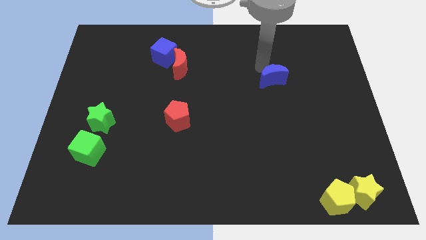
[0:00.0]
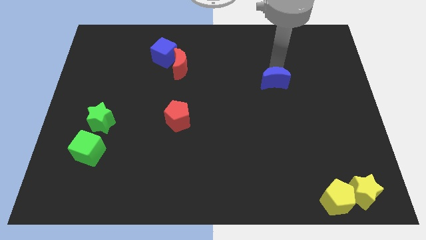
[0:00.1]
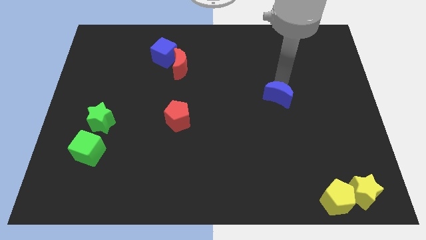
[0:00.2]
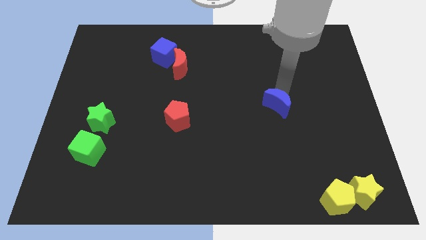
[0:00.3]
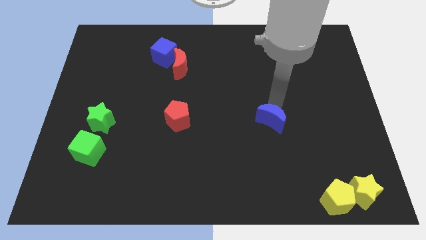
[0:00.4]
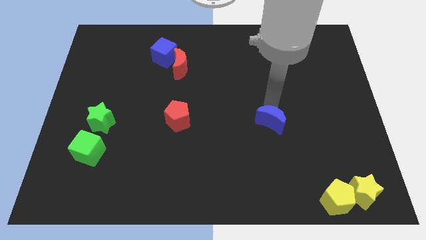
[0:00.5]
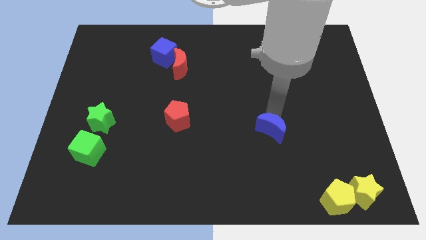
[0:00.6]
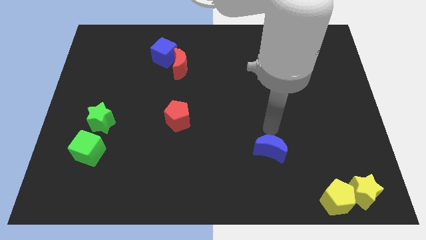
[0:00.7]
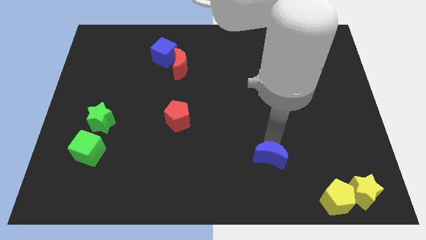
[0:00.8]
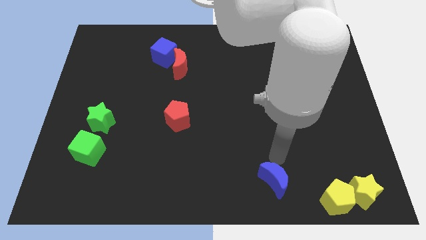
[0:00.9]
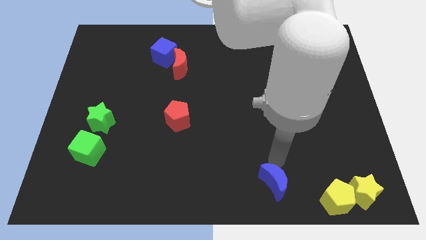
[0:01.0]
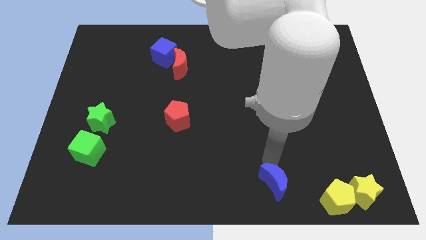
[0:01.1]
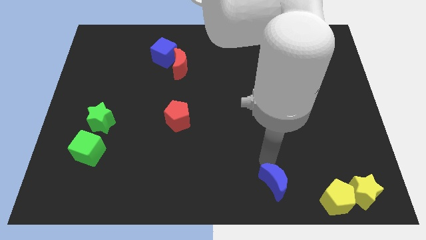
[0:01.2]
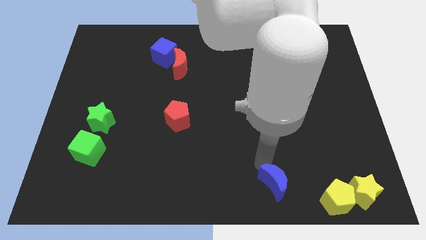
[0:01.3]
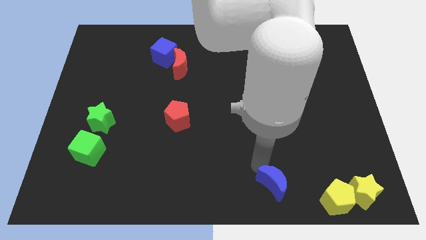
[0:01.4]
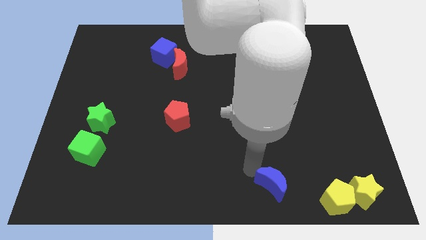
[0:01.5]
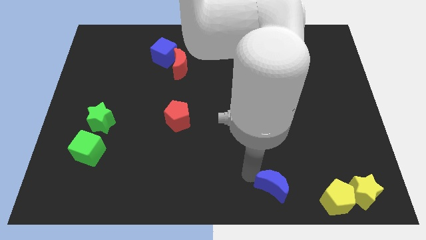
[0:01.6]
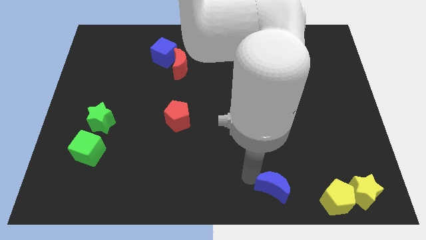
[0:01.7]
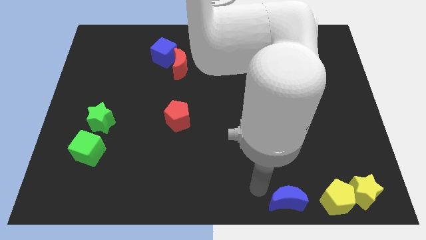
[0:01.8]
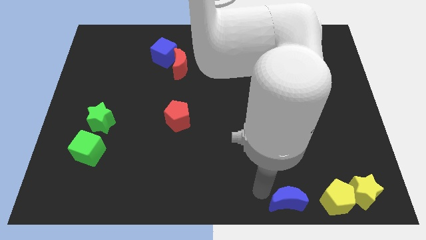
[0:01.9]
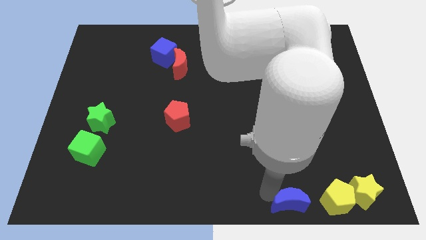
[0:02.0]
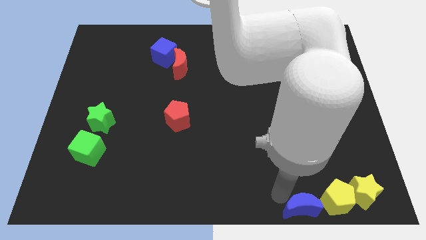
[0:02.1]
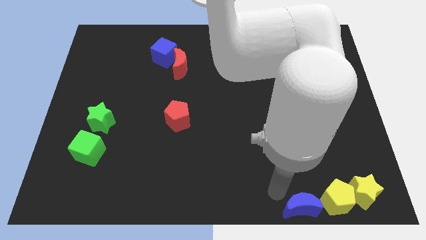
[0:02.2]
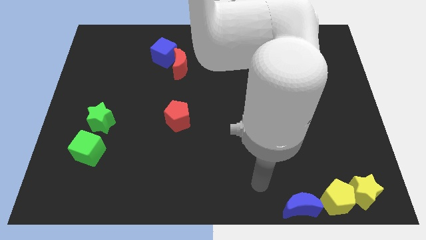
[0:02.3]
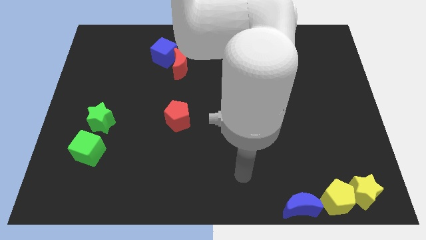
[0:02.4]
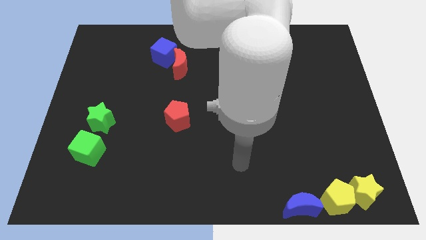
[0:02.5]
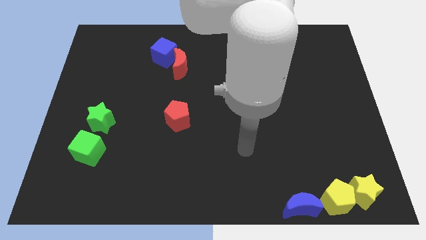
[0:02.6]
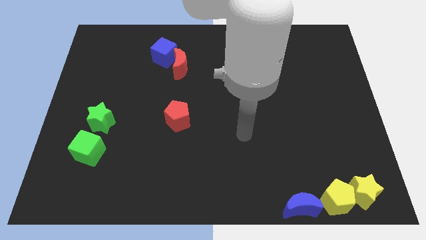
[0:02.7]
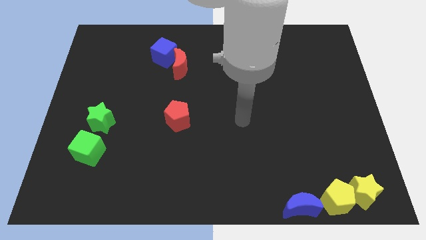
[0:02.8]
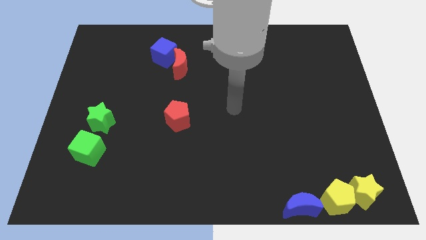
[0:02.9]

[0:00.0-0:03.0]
slide the blue moon to the left of the yellow pentagon

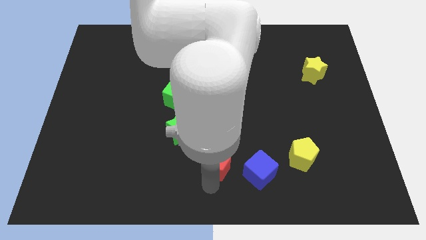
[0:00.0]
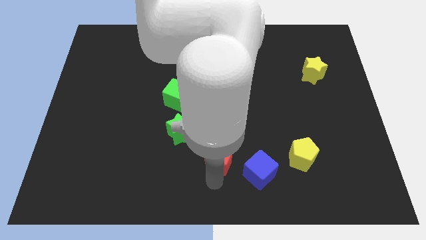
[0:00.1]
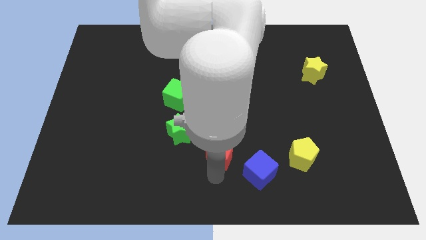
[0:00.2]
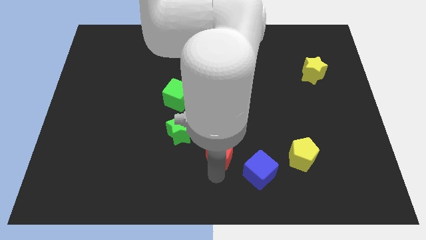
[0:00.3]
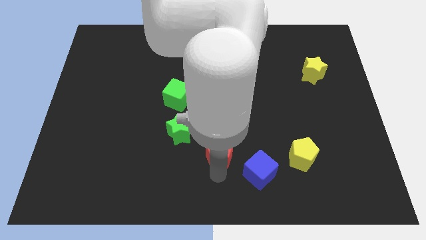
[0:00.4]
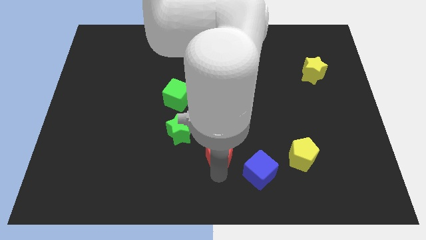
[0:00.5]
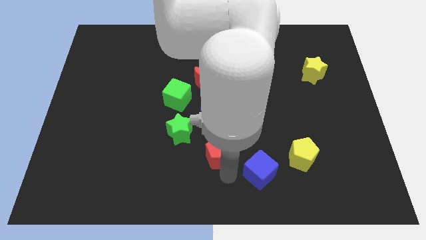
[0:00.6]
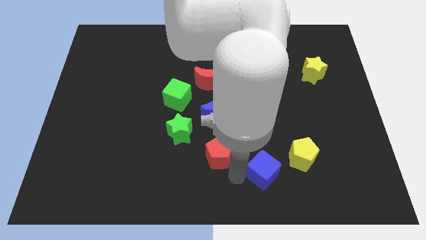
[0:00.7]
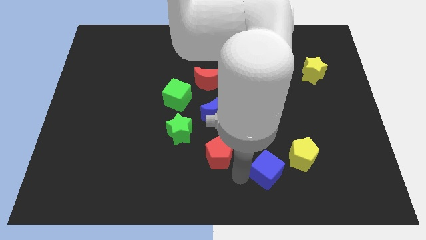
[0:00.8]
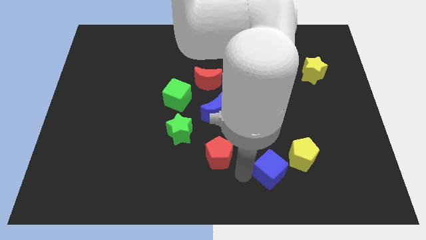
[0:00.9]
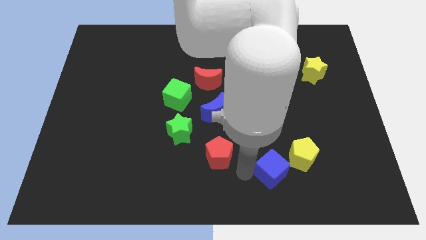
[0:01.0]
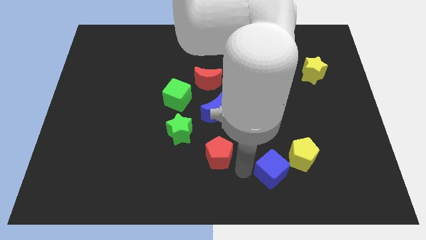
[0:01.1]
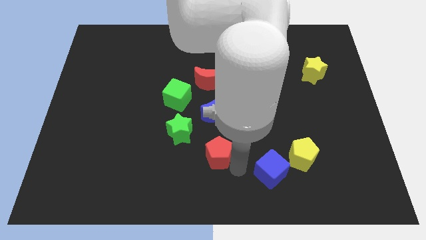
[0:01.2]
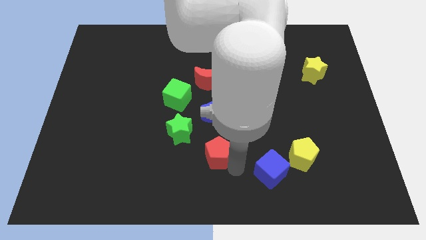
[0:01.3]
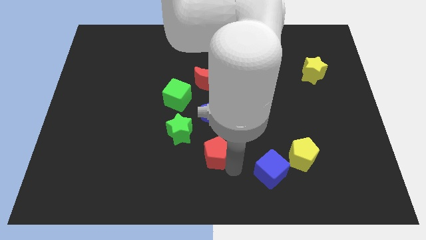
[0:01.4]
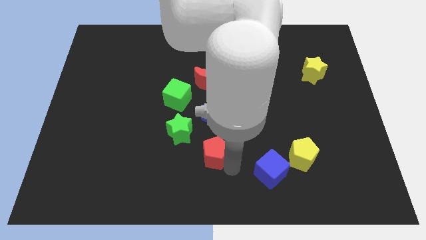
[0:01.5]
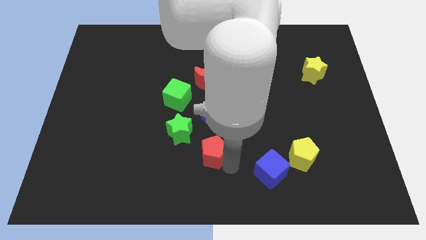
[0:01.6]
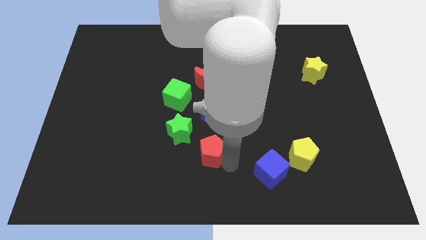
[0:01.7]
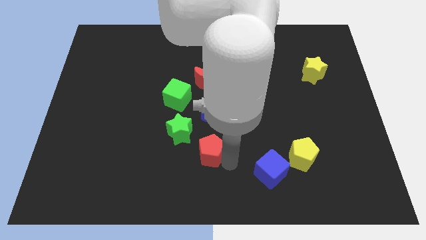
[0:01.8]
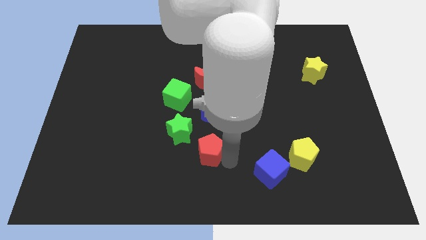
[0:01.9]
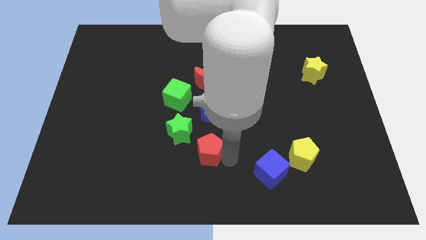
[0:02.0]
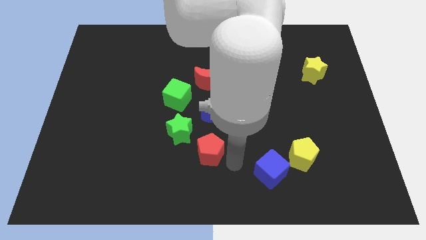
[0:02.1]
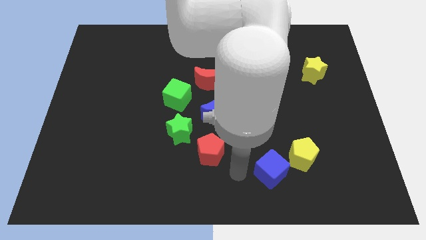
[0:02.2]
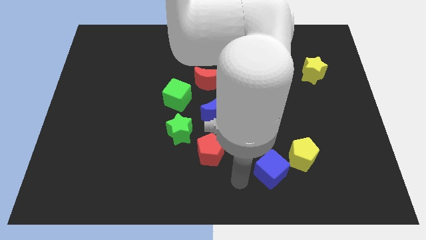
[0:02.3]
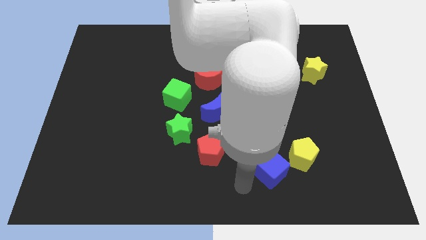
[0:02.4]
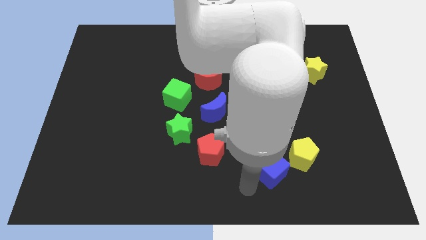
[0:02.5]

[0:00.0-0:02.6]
place red pentagon to the bottom right of green star

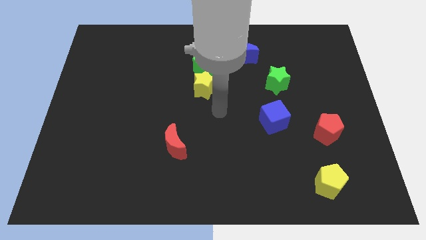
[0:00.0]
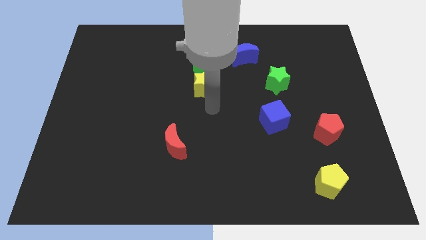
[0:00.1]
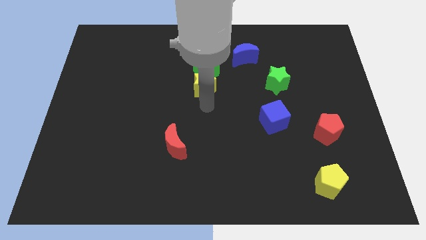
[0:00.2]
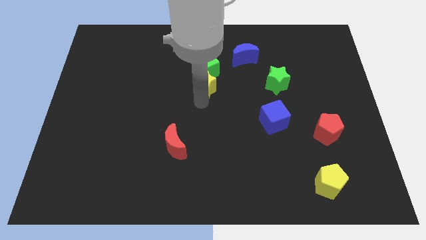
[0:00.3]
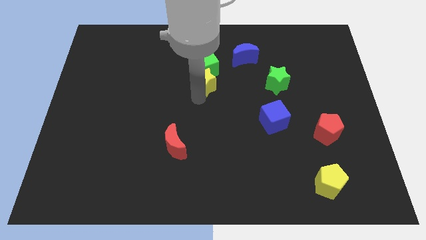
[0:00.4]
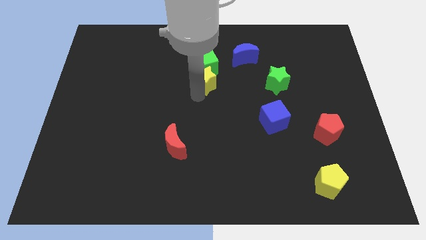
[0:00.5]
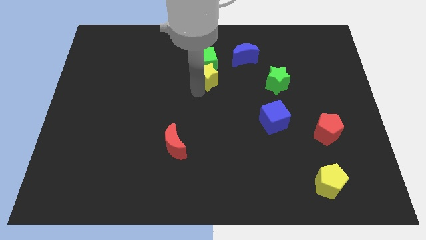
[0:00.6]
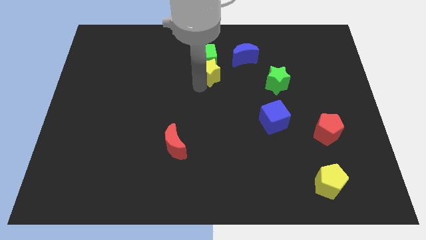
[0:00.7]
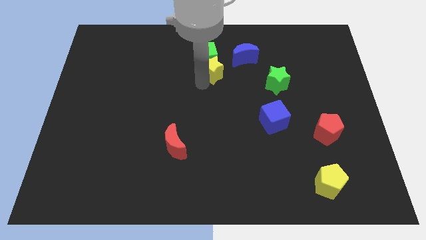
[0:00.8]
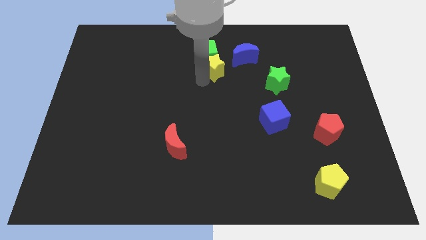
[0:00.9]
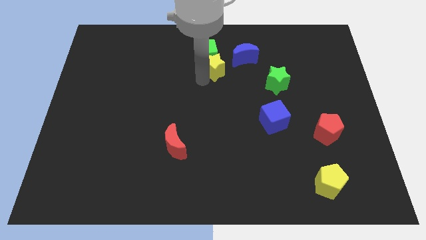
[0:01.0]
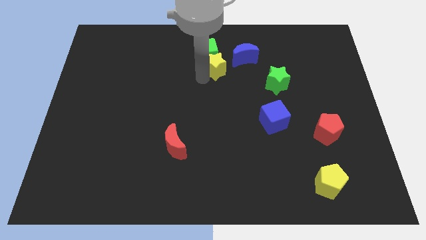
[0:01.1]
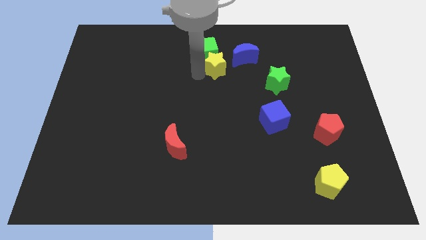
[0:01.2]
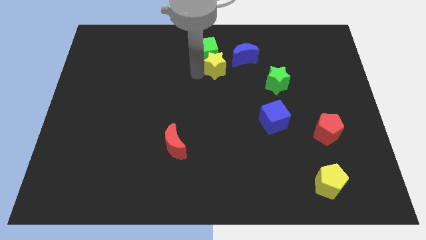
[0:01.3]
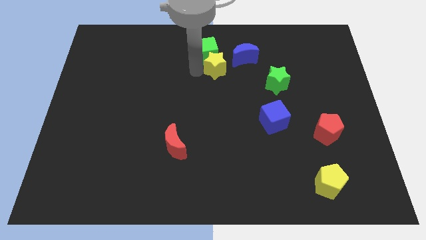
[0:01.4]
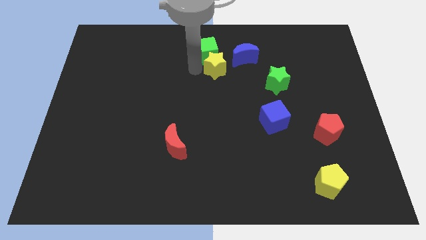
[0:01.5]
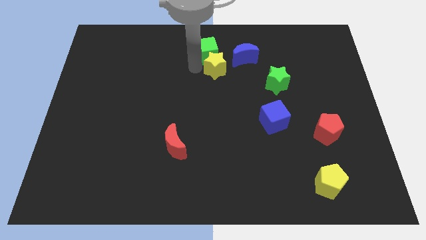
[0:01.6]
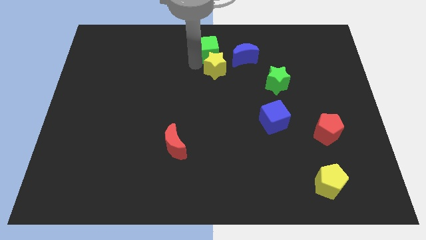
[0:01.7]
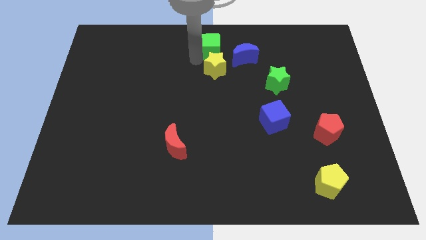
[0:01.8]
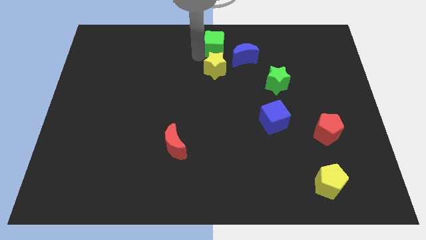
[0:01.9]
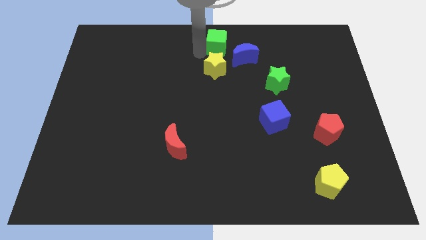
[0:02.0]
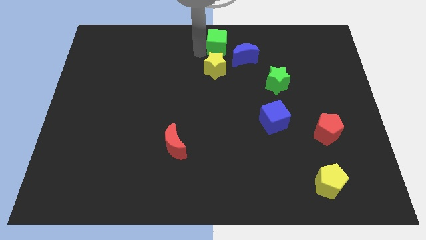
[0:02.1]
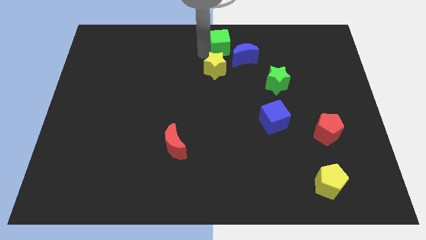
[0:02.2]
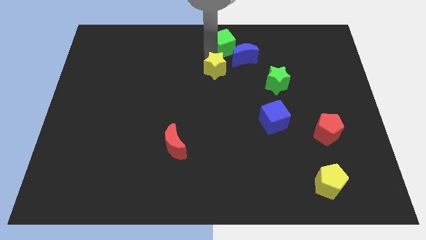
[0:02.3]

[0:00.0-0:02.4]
push the green cube and yellow star towards the top center of the board

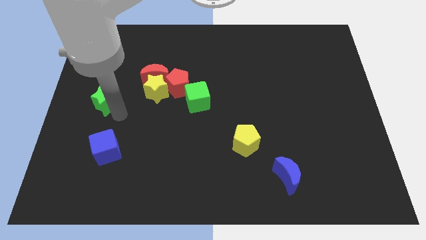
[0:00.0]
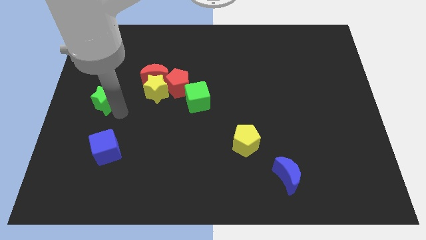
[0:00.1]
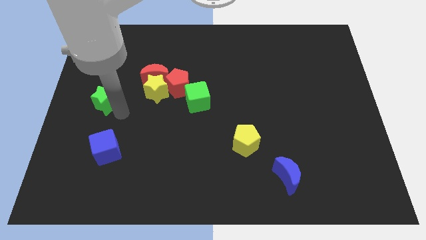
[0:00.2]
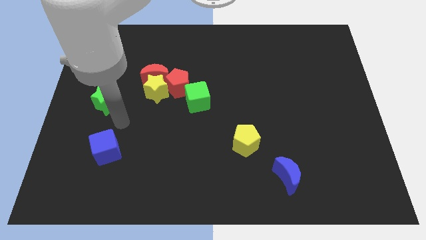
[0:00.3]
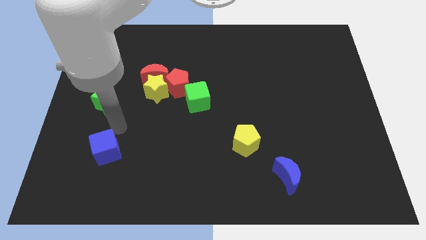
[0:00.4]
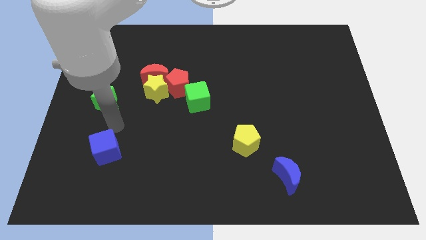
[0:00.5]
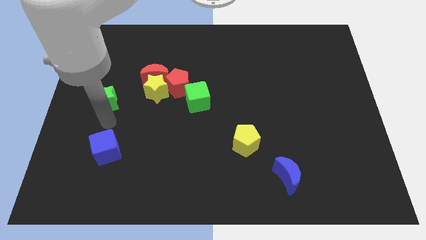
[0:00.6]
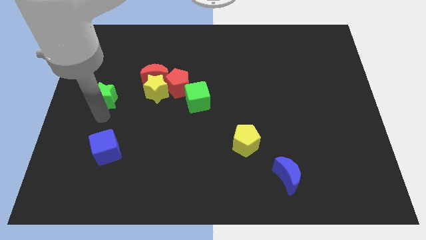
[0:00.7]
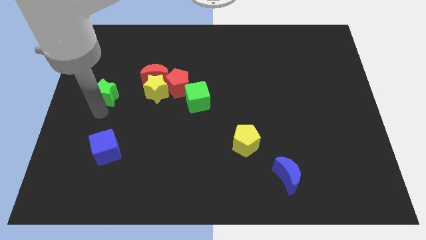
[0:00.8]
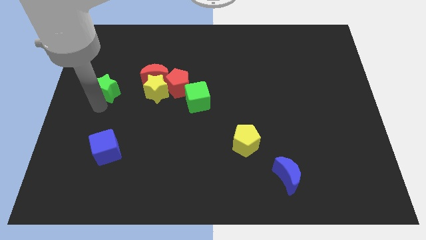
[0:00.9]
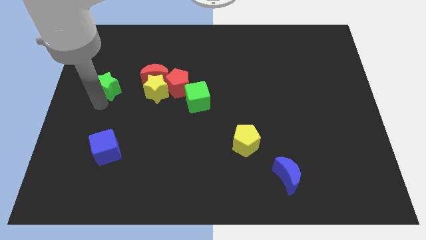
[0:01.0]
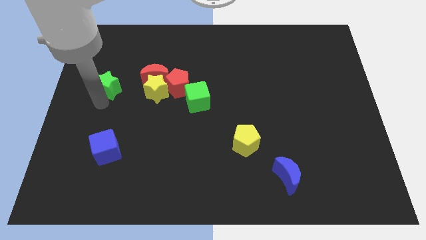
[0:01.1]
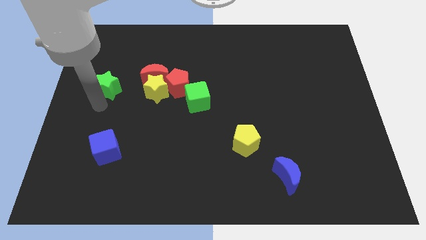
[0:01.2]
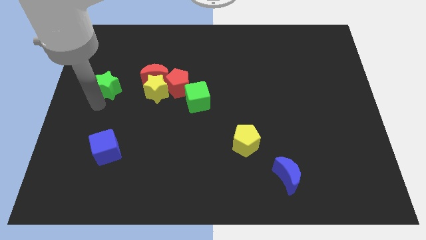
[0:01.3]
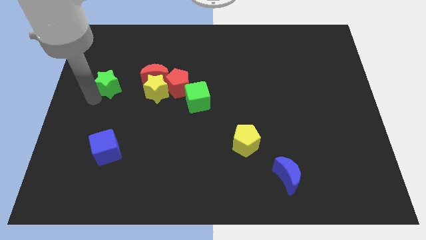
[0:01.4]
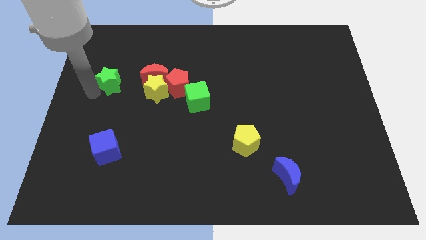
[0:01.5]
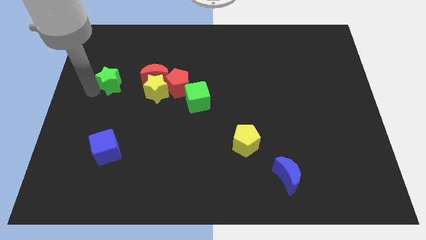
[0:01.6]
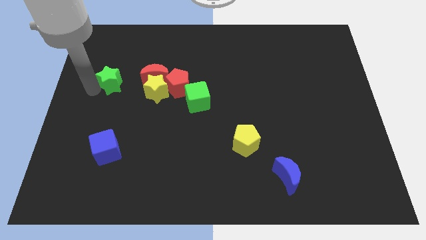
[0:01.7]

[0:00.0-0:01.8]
move green star left beside the red moon
